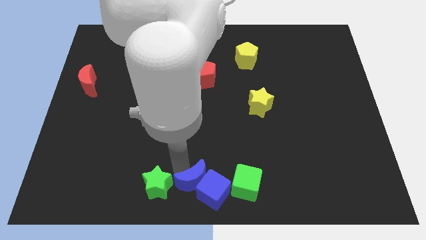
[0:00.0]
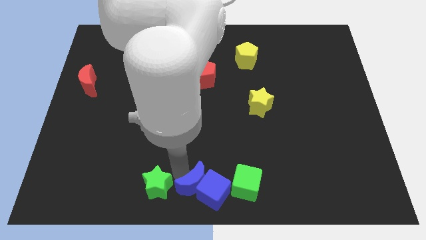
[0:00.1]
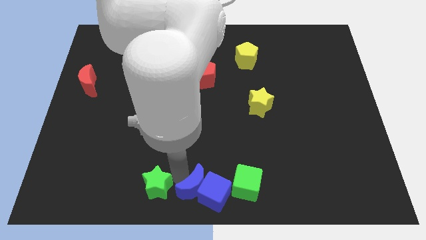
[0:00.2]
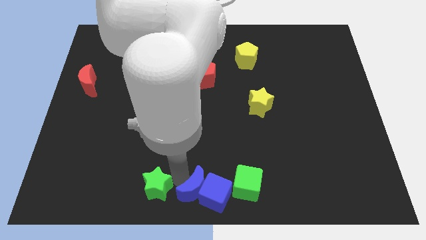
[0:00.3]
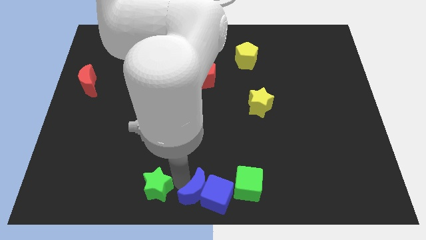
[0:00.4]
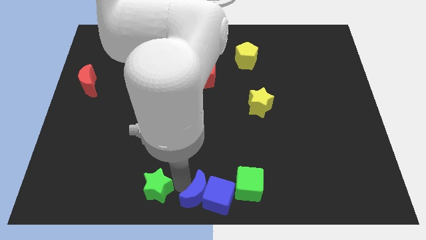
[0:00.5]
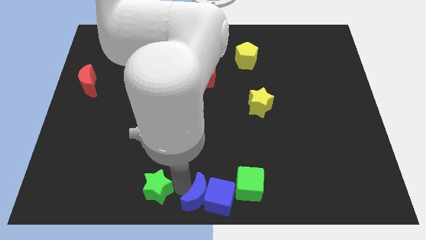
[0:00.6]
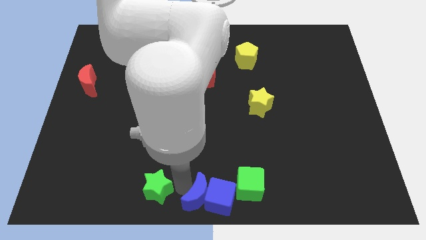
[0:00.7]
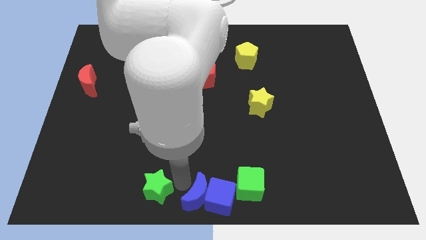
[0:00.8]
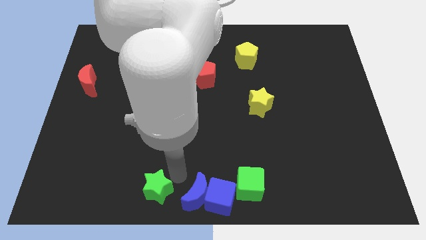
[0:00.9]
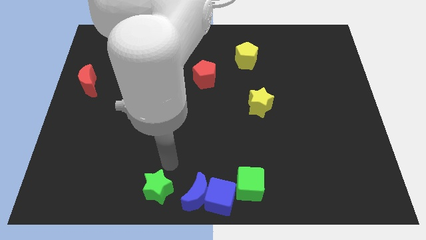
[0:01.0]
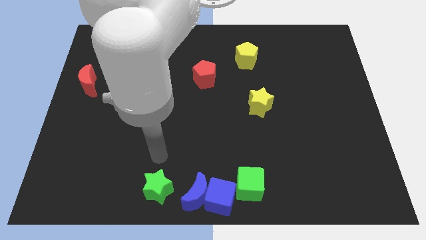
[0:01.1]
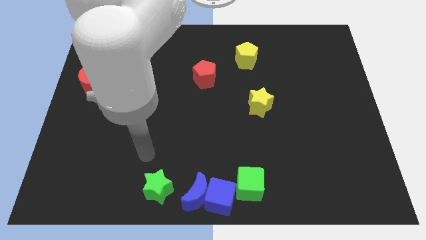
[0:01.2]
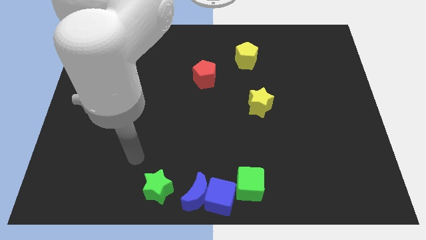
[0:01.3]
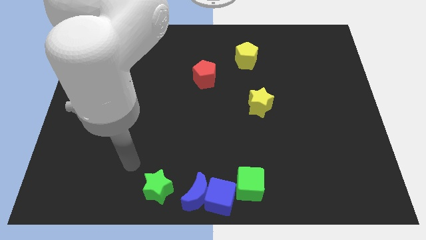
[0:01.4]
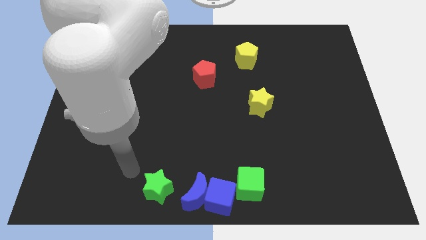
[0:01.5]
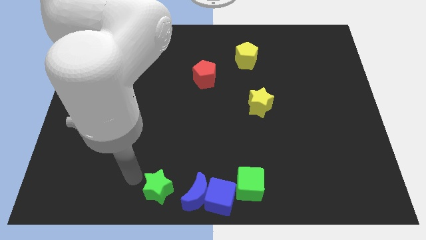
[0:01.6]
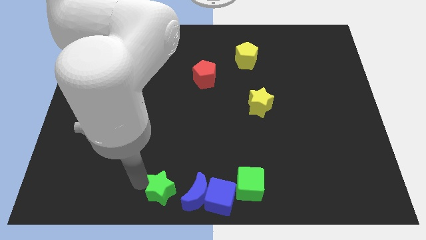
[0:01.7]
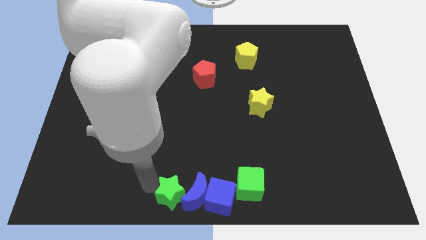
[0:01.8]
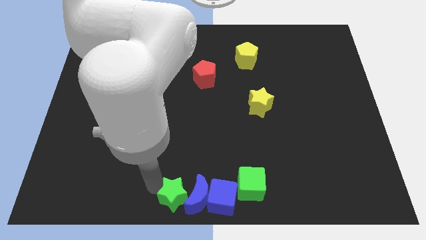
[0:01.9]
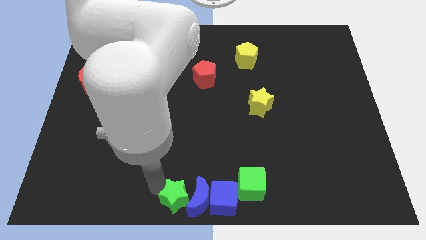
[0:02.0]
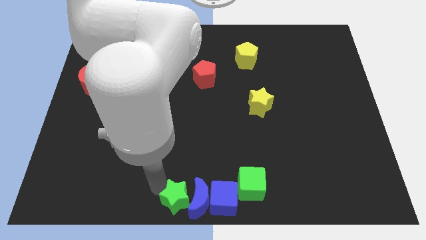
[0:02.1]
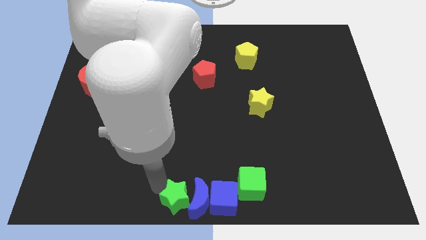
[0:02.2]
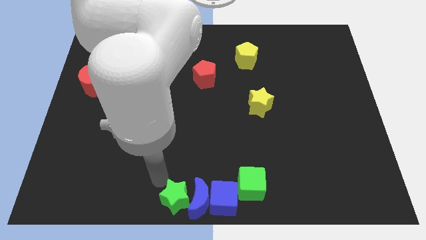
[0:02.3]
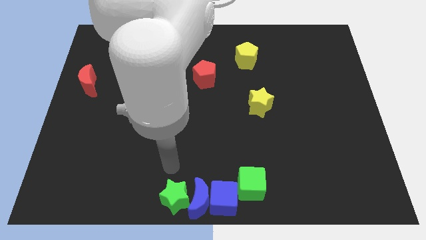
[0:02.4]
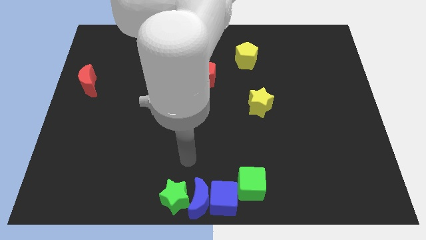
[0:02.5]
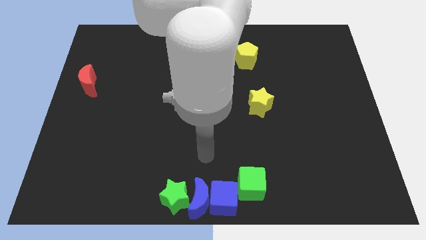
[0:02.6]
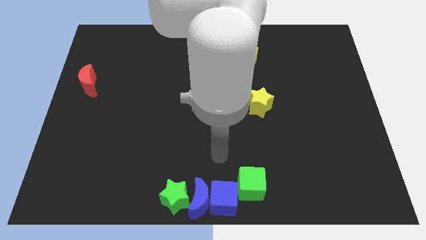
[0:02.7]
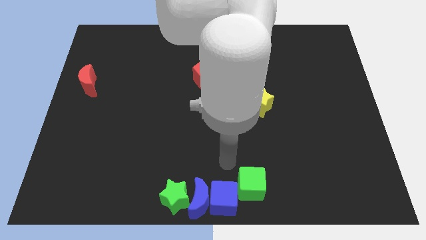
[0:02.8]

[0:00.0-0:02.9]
push the green star into the blue moon

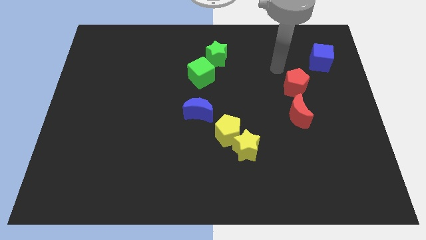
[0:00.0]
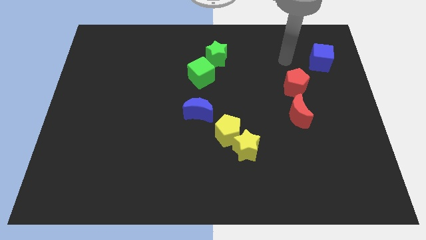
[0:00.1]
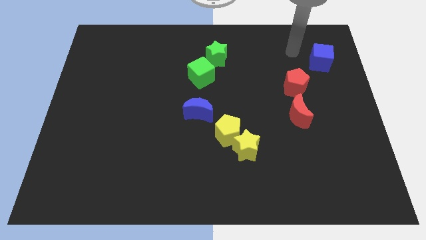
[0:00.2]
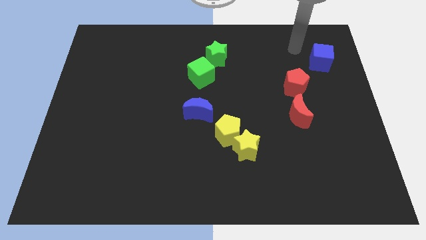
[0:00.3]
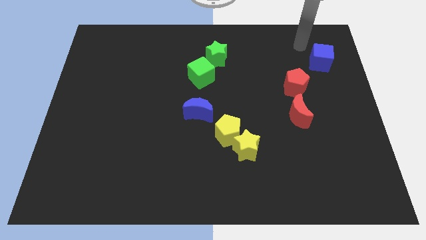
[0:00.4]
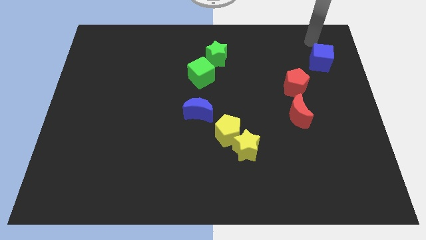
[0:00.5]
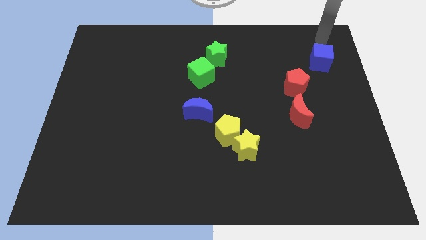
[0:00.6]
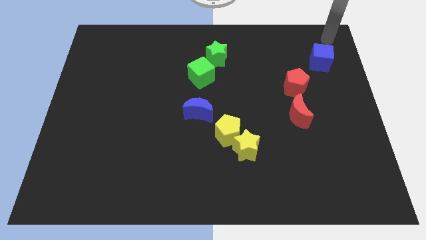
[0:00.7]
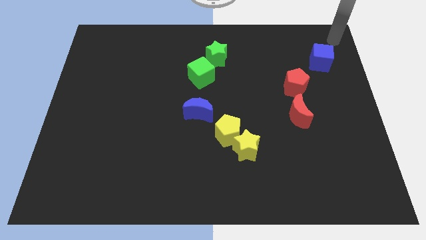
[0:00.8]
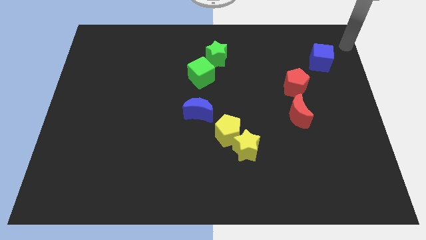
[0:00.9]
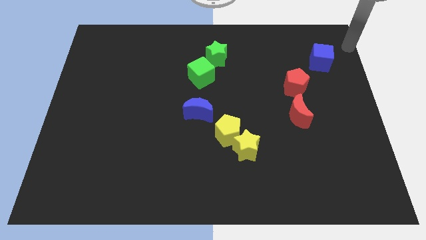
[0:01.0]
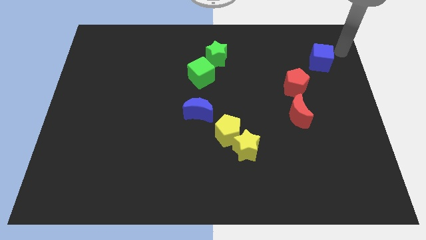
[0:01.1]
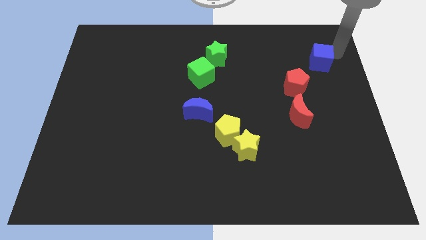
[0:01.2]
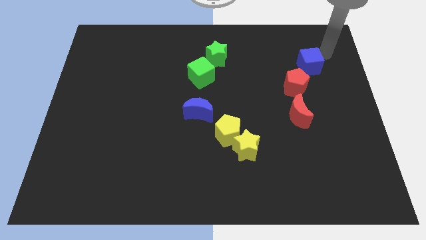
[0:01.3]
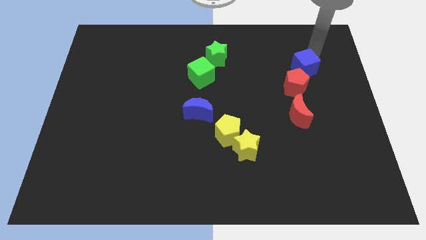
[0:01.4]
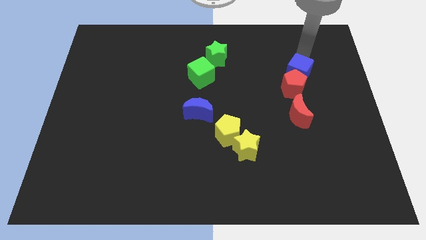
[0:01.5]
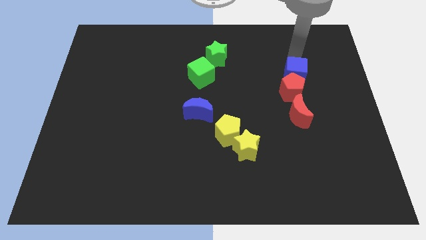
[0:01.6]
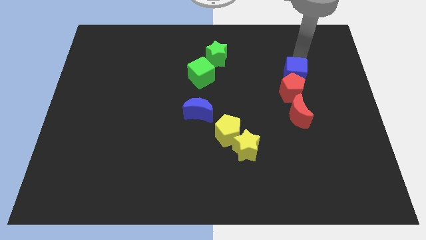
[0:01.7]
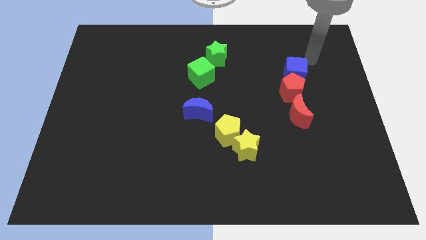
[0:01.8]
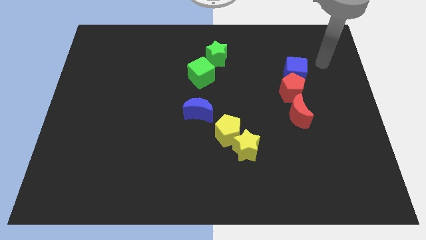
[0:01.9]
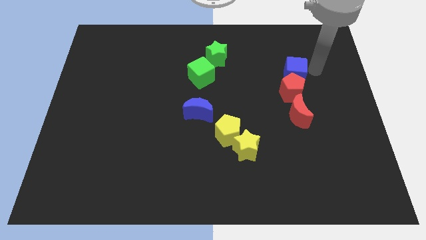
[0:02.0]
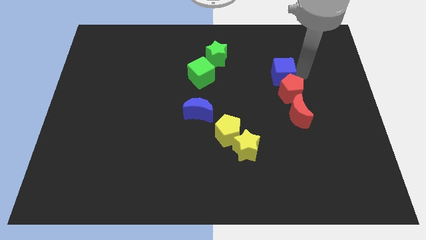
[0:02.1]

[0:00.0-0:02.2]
place the blue cube above the red pentagon

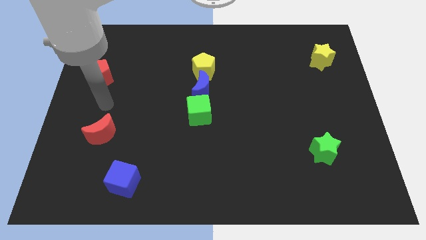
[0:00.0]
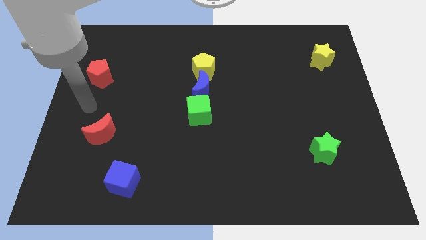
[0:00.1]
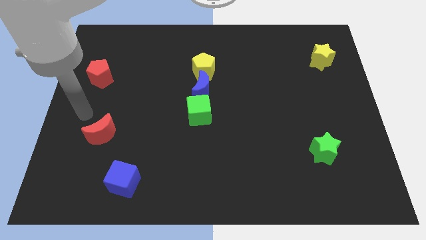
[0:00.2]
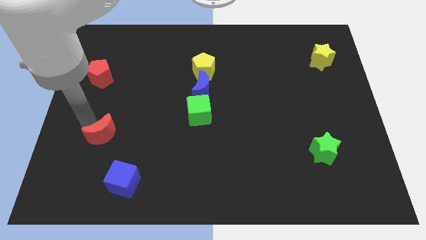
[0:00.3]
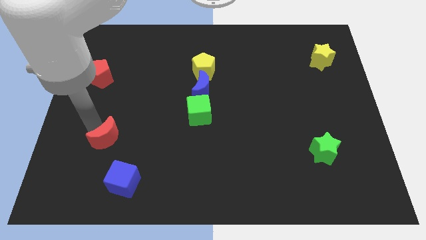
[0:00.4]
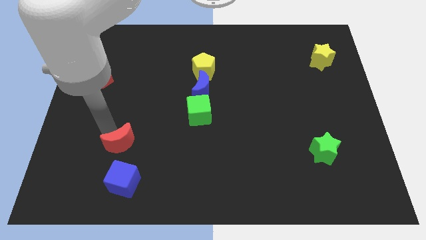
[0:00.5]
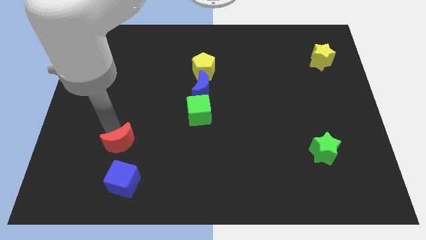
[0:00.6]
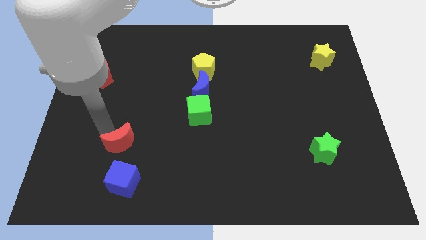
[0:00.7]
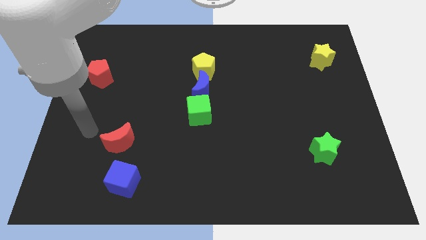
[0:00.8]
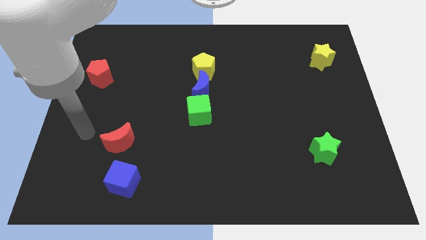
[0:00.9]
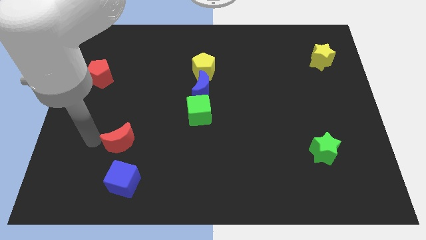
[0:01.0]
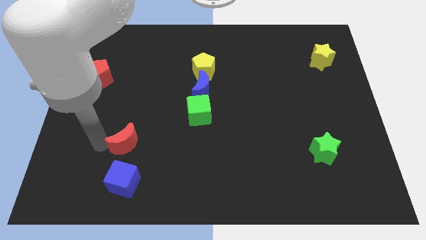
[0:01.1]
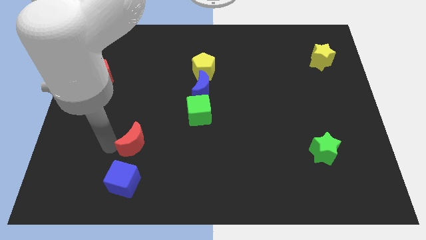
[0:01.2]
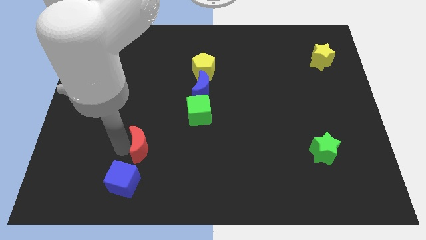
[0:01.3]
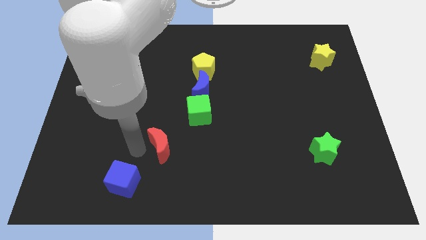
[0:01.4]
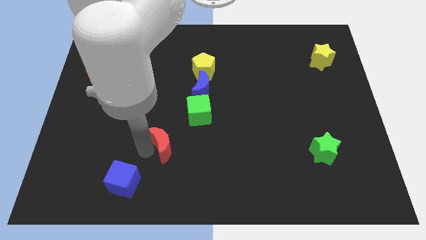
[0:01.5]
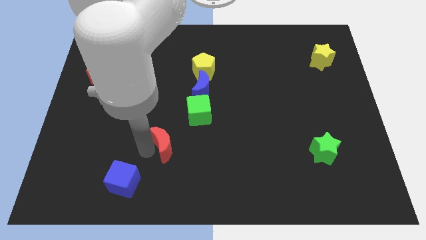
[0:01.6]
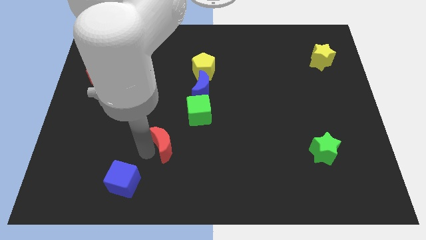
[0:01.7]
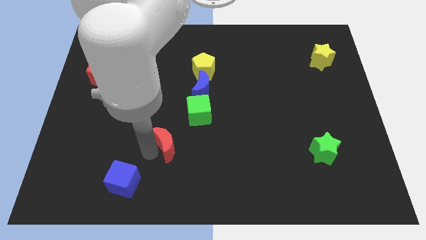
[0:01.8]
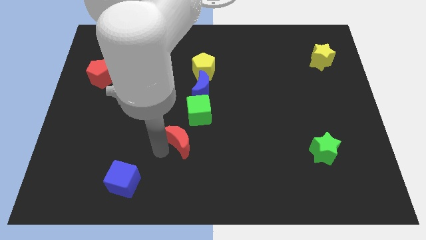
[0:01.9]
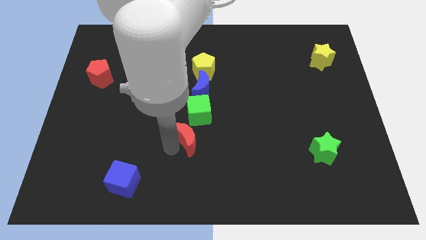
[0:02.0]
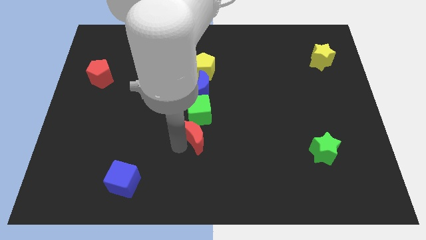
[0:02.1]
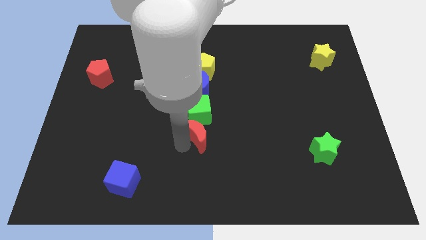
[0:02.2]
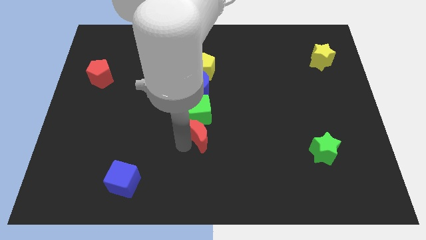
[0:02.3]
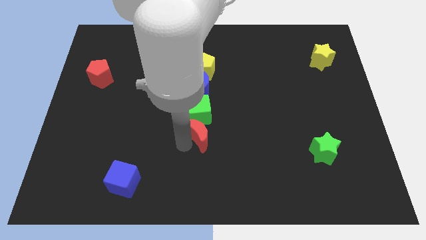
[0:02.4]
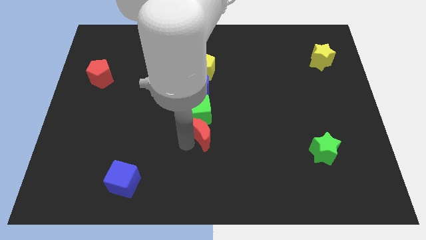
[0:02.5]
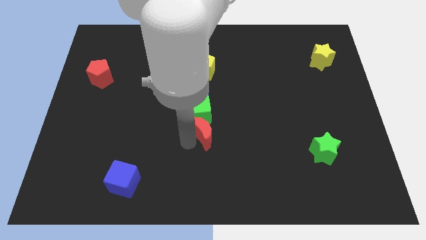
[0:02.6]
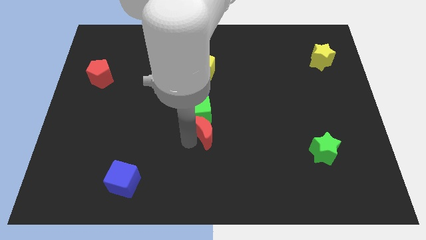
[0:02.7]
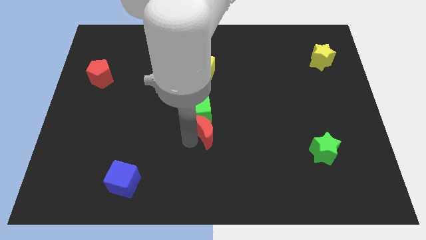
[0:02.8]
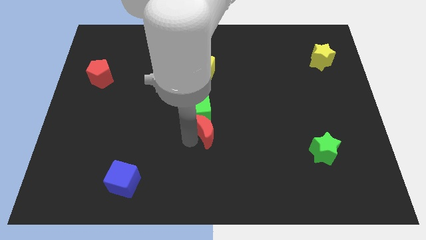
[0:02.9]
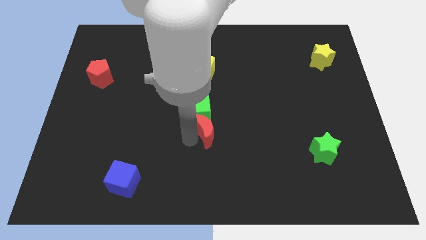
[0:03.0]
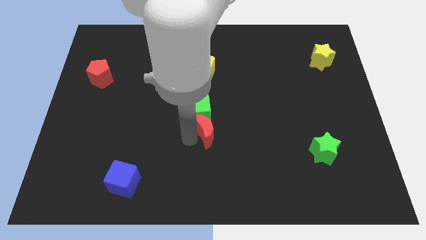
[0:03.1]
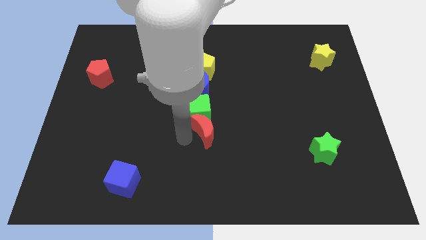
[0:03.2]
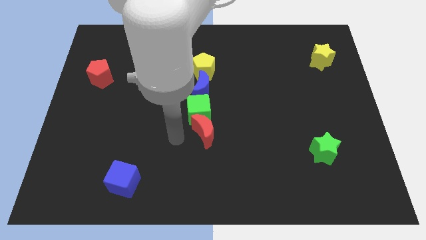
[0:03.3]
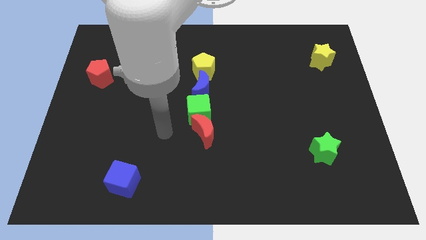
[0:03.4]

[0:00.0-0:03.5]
push the red crescent below the green cube

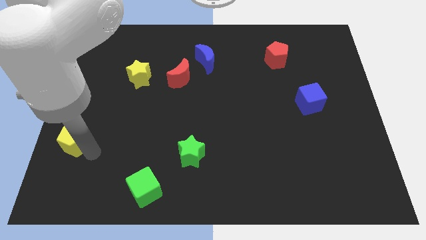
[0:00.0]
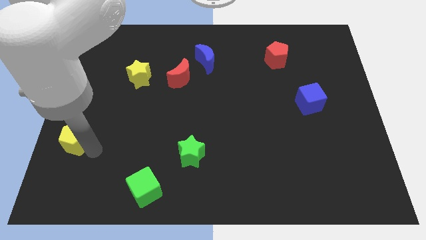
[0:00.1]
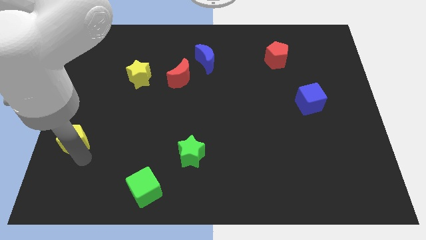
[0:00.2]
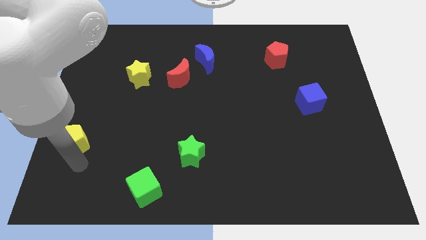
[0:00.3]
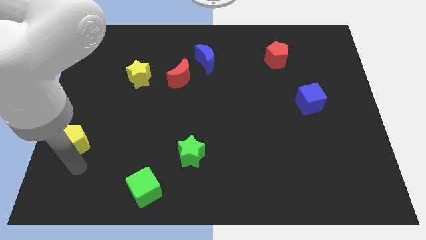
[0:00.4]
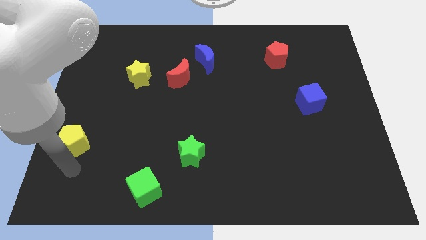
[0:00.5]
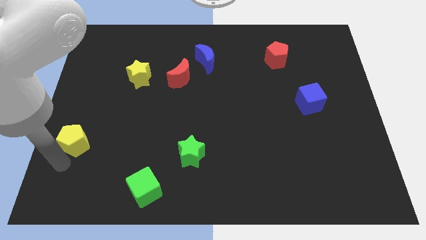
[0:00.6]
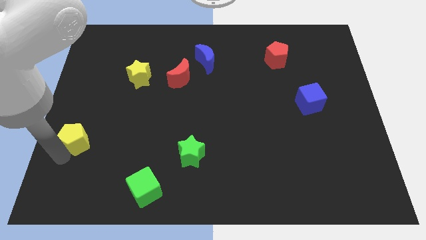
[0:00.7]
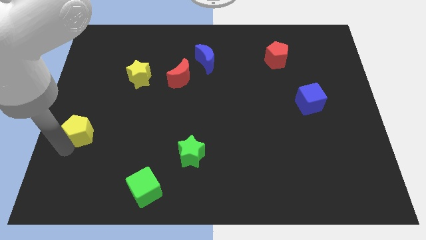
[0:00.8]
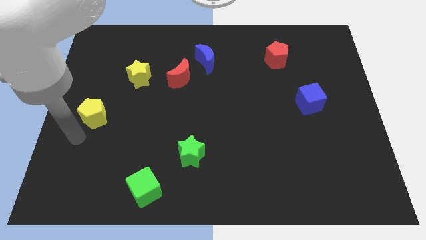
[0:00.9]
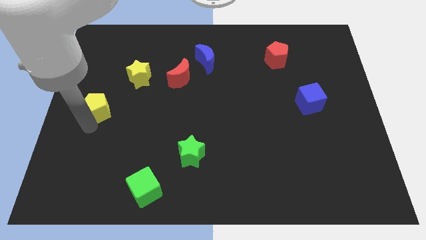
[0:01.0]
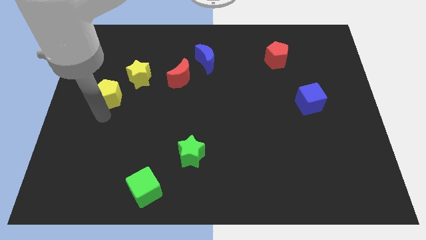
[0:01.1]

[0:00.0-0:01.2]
push the yellow pentagon to the top
